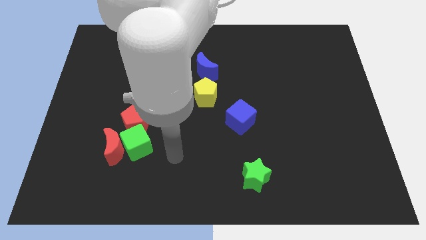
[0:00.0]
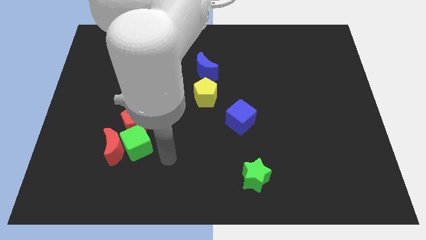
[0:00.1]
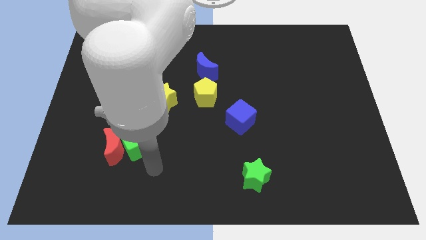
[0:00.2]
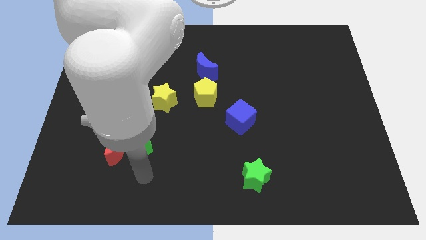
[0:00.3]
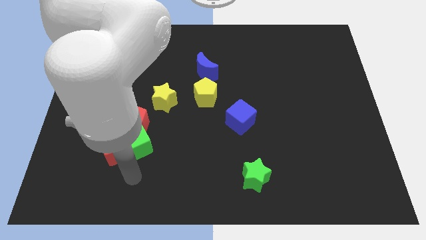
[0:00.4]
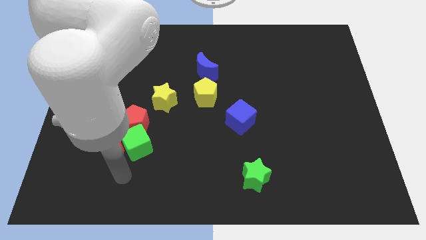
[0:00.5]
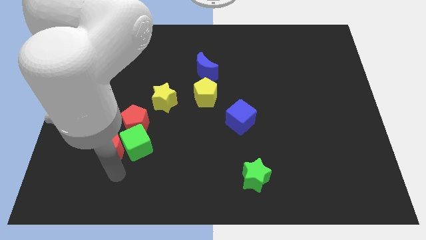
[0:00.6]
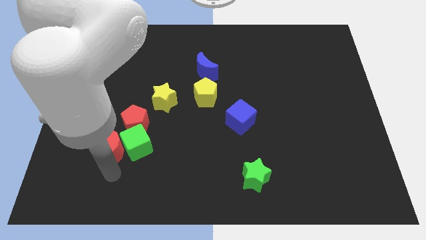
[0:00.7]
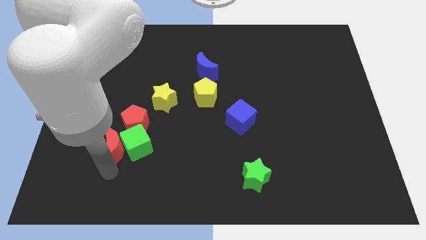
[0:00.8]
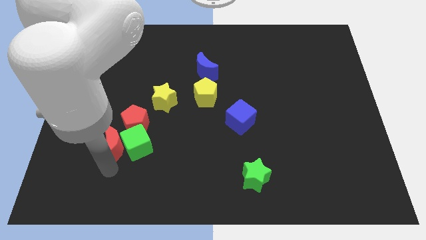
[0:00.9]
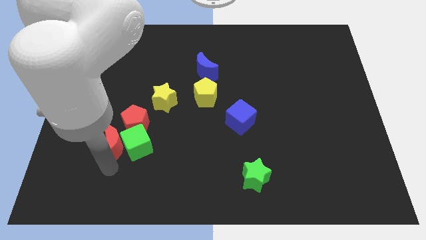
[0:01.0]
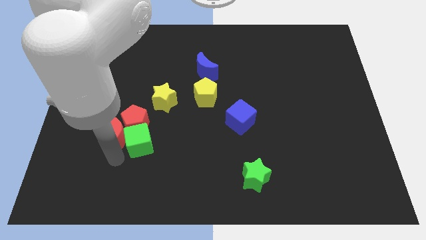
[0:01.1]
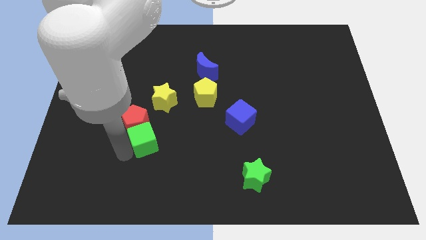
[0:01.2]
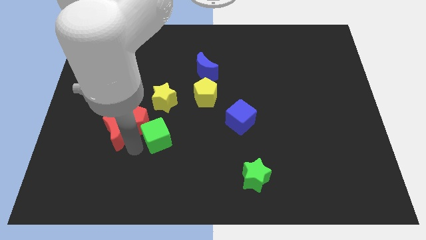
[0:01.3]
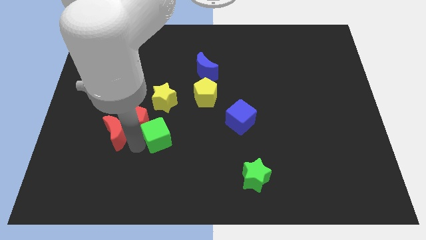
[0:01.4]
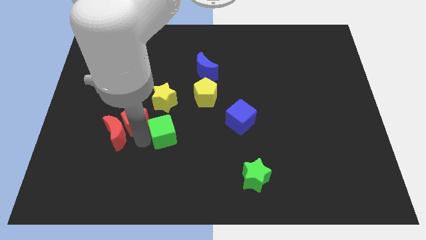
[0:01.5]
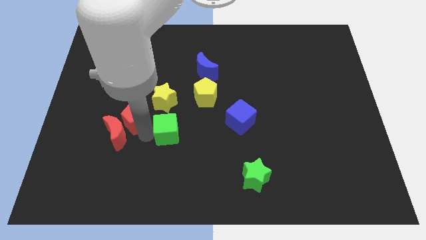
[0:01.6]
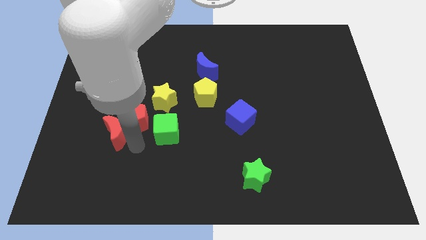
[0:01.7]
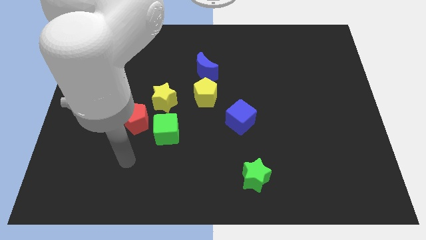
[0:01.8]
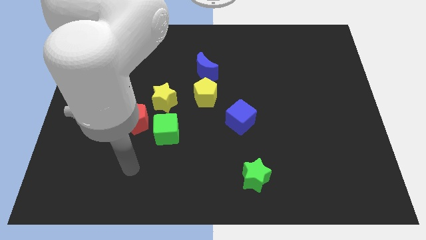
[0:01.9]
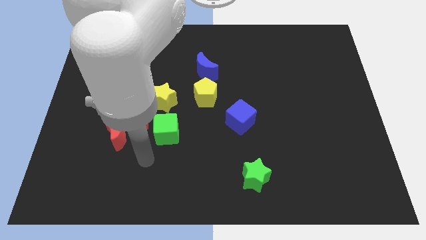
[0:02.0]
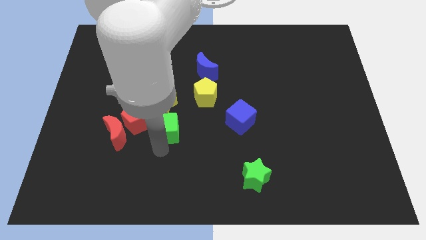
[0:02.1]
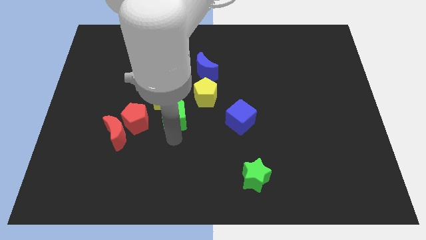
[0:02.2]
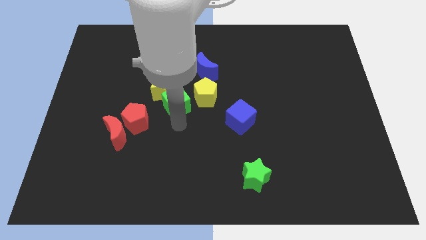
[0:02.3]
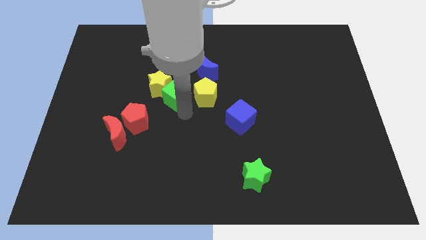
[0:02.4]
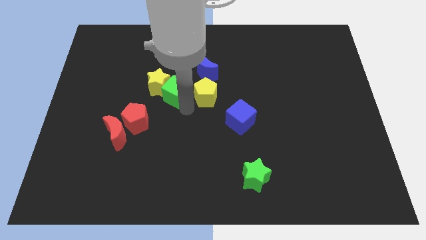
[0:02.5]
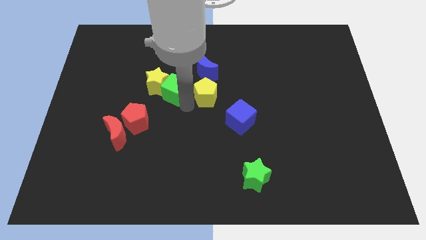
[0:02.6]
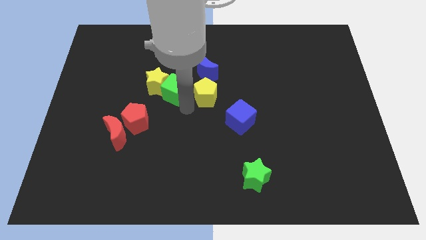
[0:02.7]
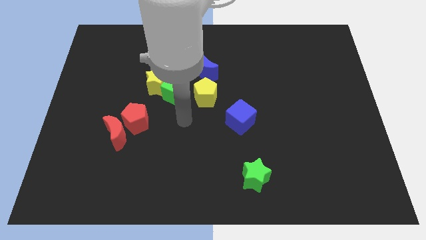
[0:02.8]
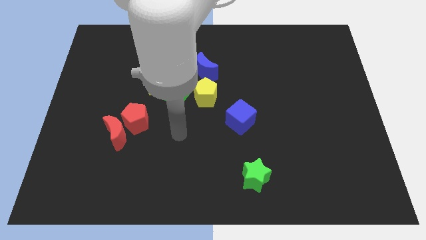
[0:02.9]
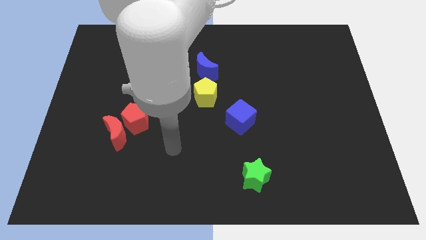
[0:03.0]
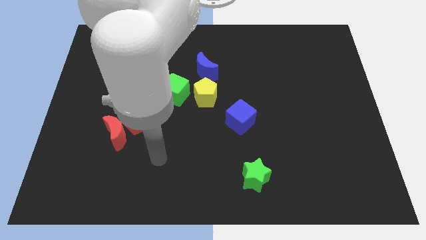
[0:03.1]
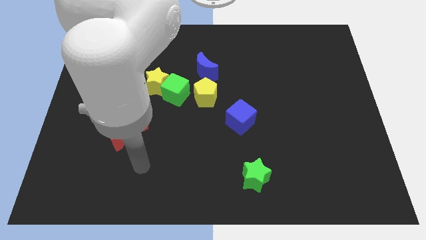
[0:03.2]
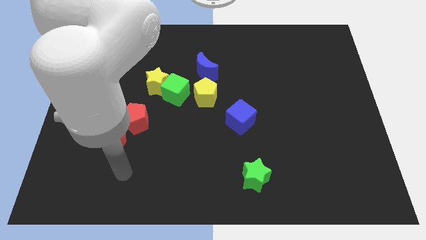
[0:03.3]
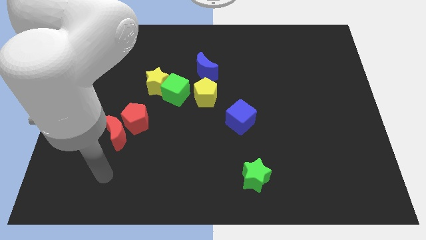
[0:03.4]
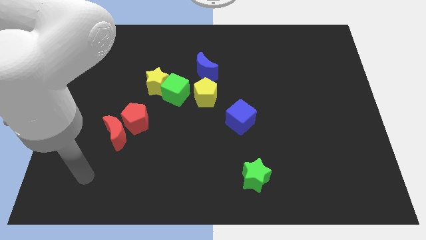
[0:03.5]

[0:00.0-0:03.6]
slightly push the green cube towards the yellow star

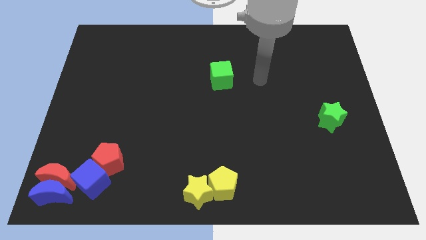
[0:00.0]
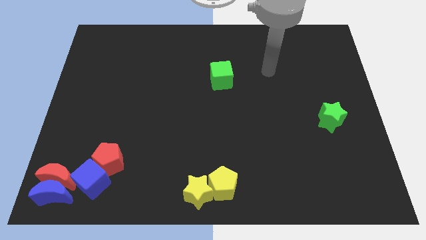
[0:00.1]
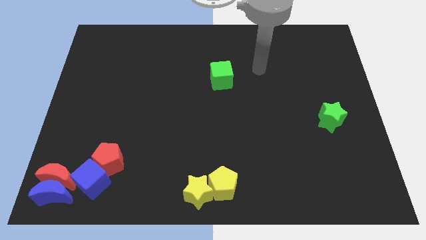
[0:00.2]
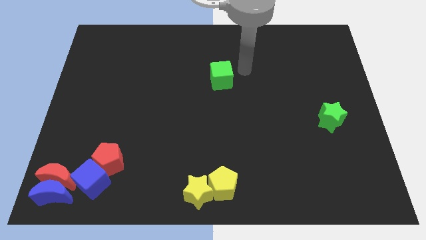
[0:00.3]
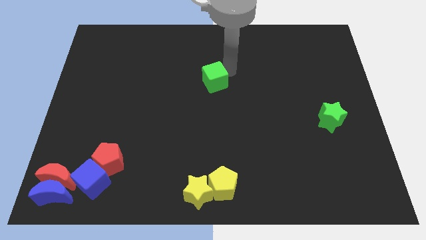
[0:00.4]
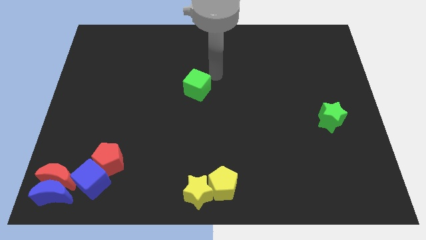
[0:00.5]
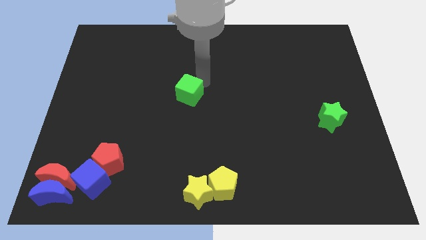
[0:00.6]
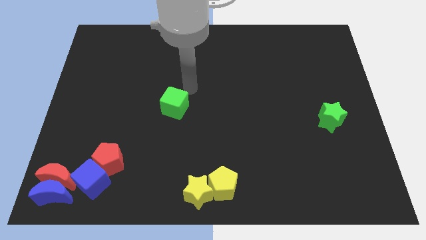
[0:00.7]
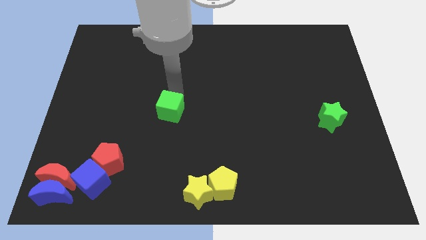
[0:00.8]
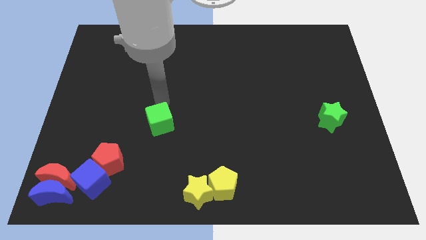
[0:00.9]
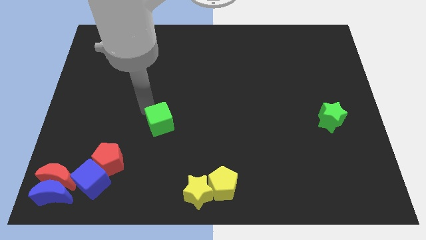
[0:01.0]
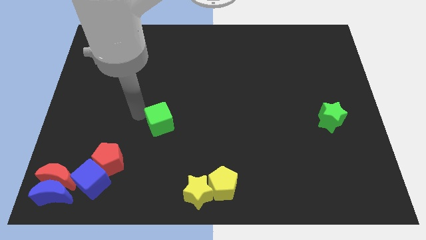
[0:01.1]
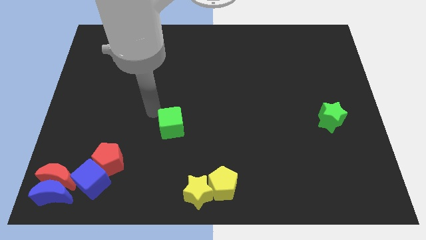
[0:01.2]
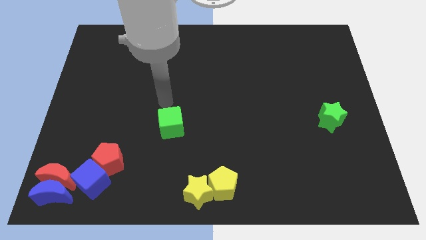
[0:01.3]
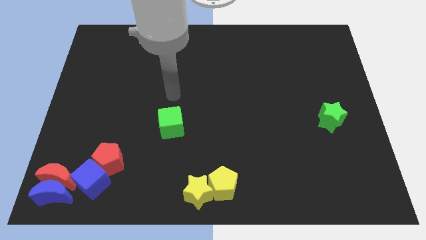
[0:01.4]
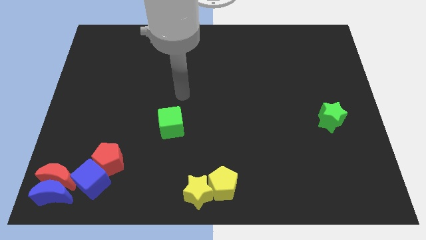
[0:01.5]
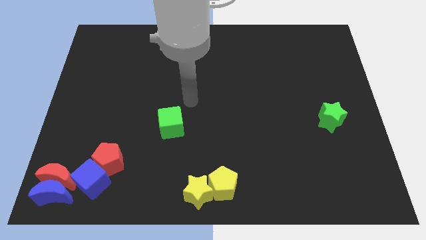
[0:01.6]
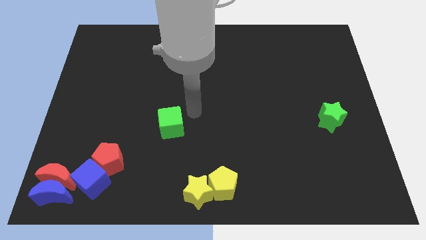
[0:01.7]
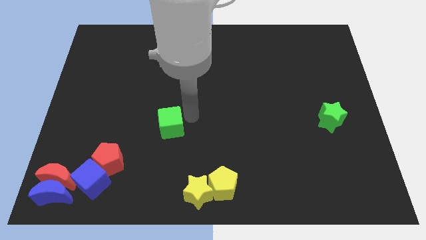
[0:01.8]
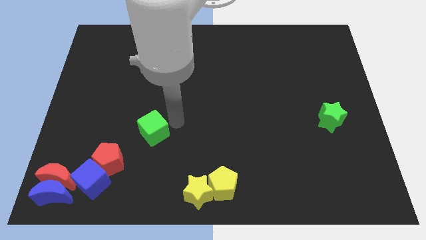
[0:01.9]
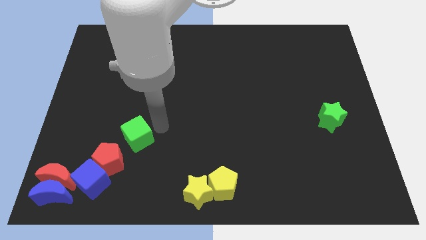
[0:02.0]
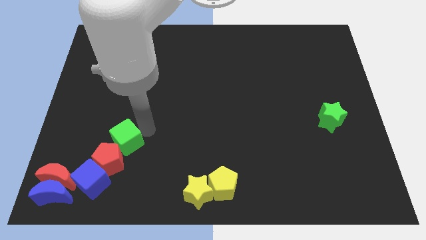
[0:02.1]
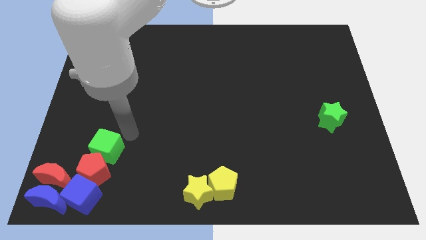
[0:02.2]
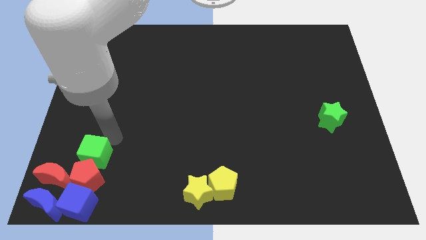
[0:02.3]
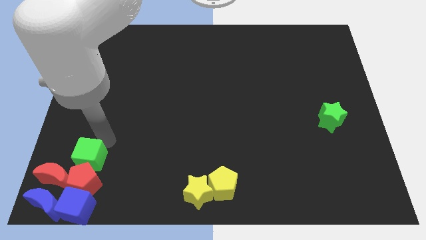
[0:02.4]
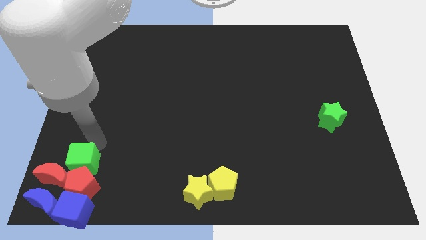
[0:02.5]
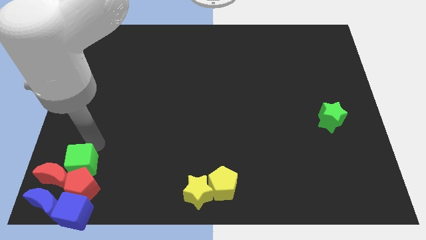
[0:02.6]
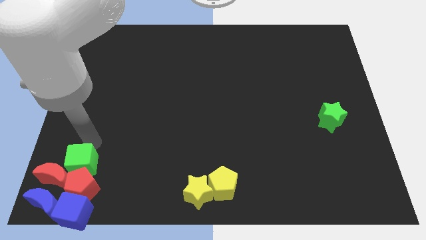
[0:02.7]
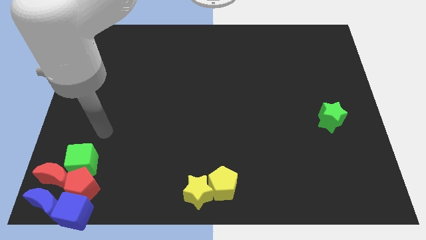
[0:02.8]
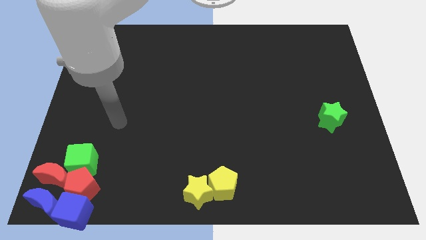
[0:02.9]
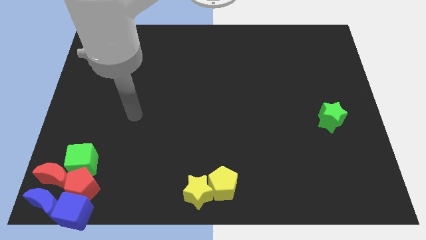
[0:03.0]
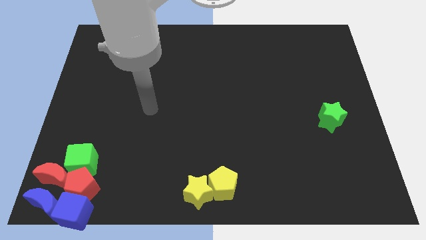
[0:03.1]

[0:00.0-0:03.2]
push green cube above red pentagon

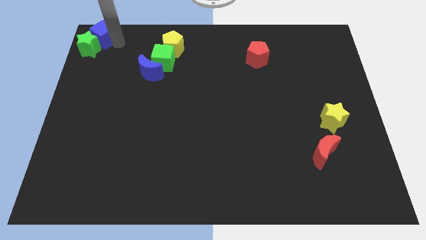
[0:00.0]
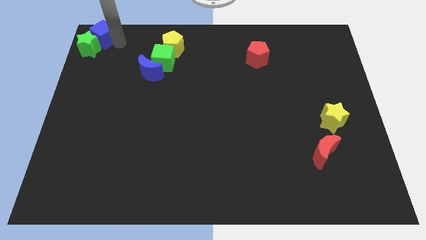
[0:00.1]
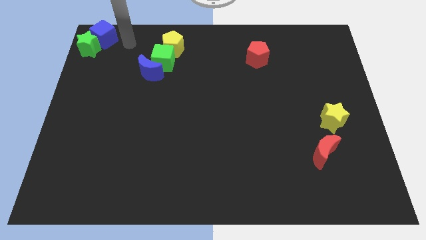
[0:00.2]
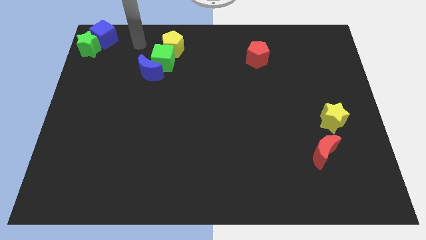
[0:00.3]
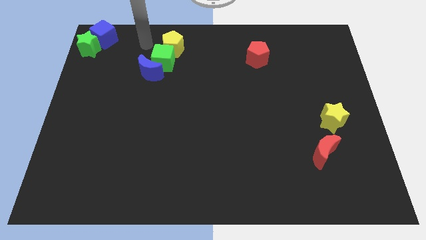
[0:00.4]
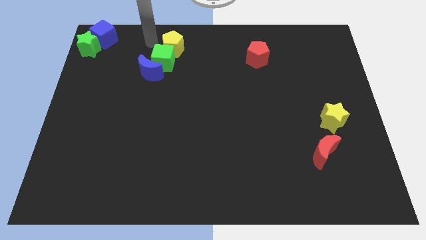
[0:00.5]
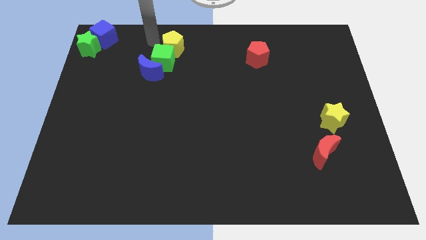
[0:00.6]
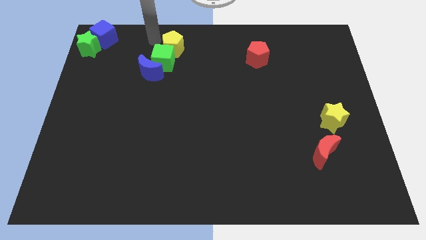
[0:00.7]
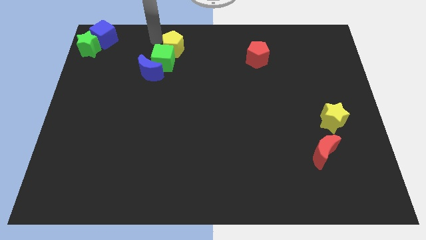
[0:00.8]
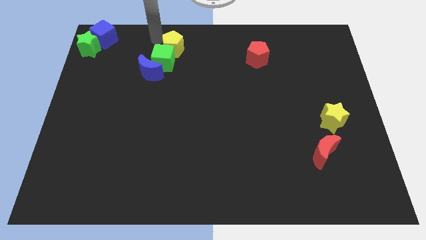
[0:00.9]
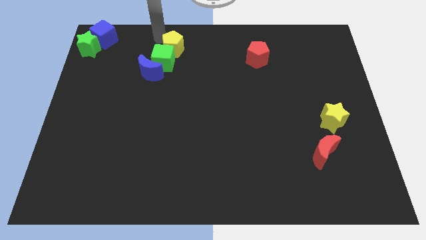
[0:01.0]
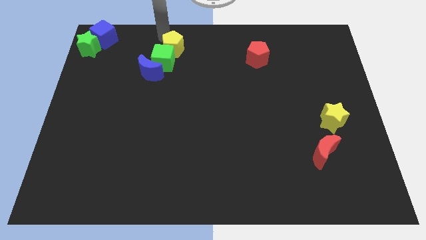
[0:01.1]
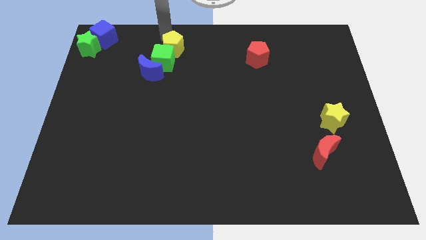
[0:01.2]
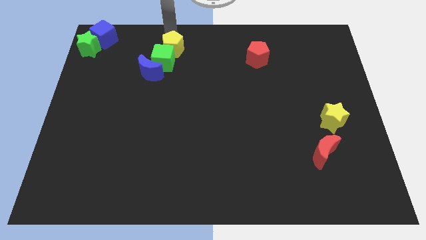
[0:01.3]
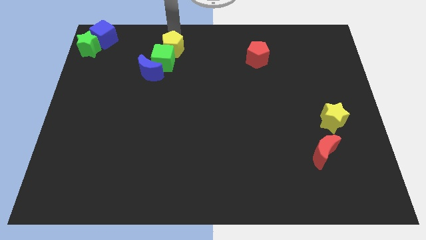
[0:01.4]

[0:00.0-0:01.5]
place your arm to the top of the yellow pentagon

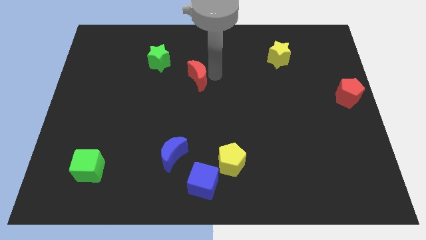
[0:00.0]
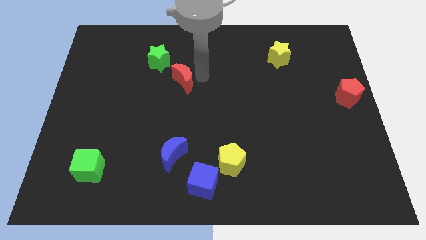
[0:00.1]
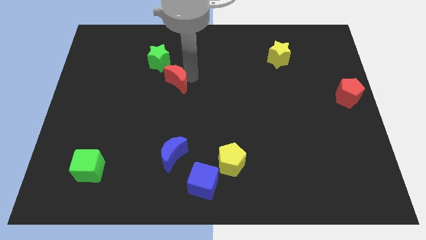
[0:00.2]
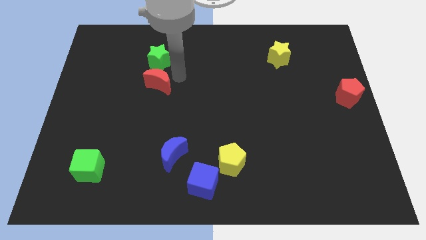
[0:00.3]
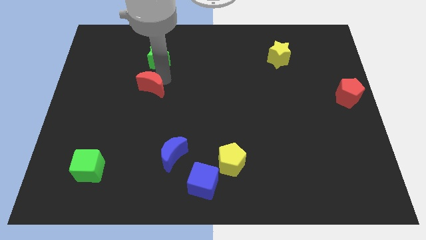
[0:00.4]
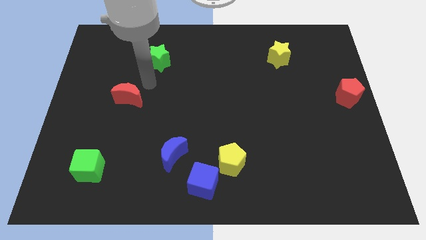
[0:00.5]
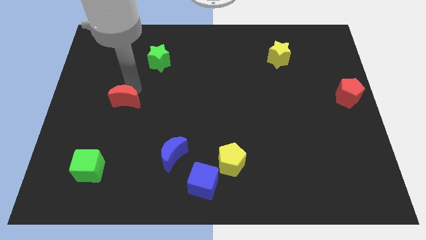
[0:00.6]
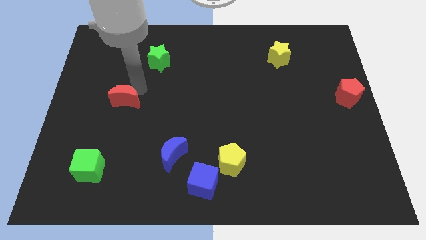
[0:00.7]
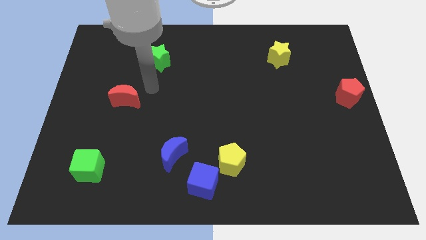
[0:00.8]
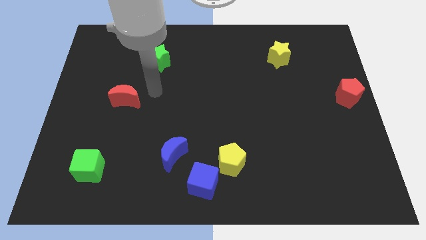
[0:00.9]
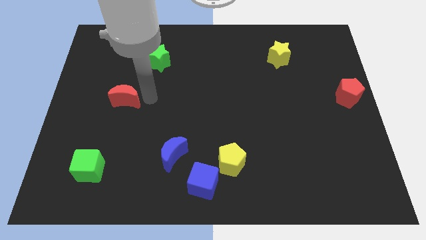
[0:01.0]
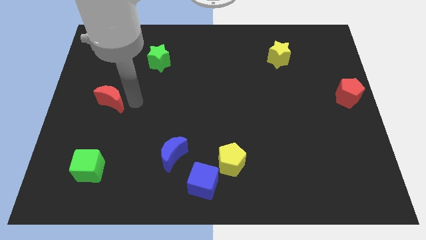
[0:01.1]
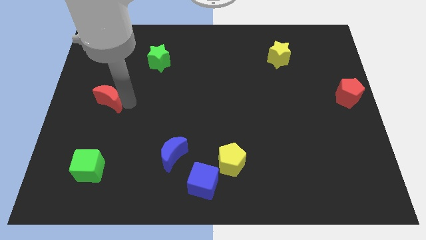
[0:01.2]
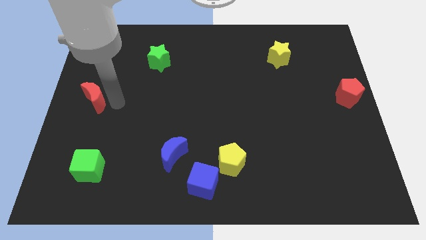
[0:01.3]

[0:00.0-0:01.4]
move the red moon above the green cube
